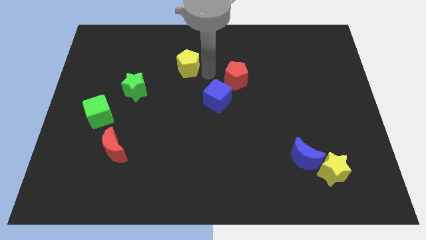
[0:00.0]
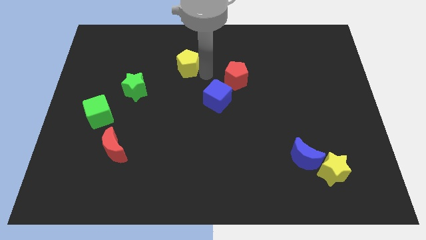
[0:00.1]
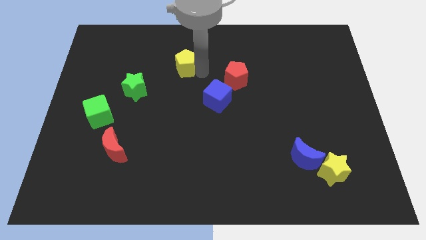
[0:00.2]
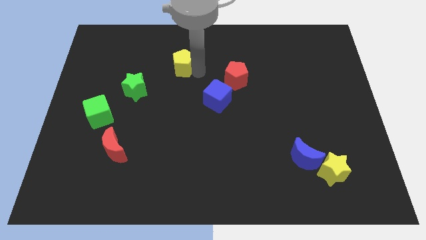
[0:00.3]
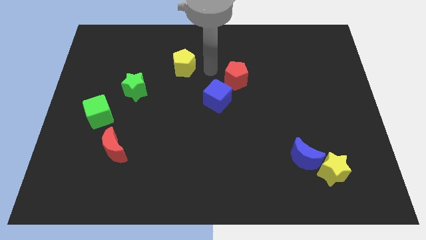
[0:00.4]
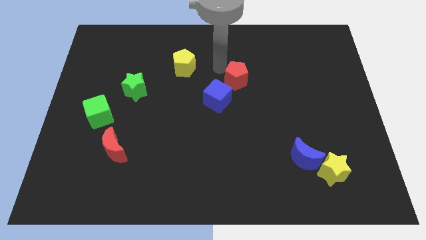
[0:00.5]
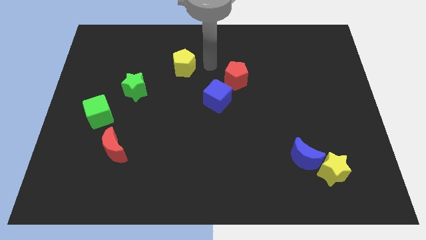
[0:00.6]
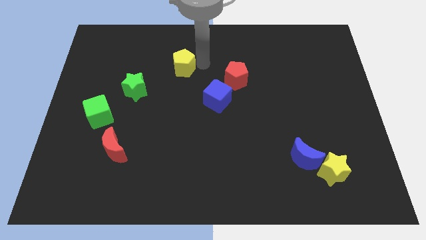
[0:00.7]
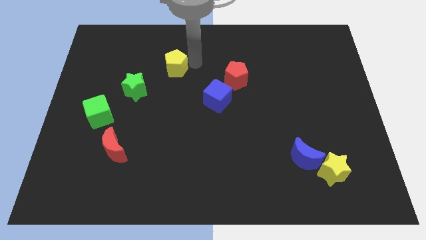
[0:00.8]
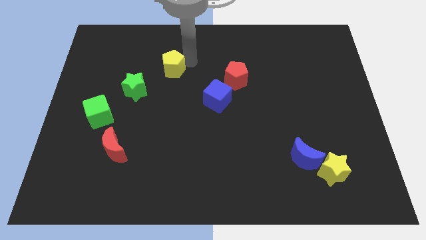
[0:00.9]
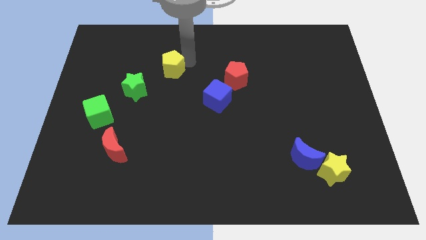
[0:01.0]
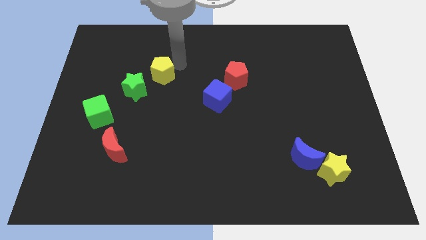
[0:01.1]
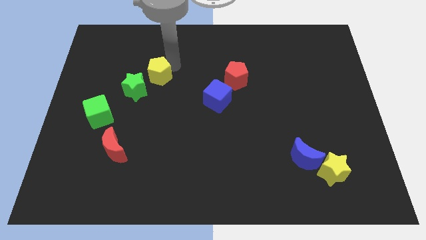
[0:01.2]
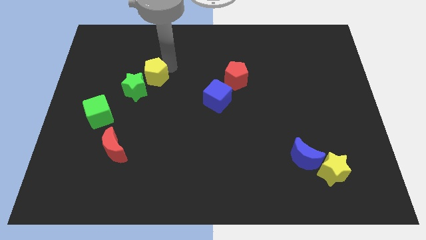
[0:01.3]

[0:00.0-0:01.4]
push the yellow pentagon towards the top right side of the green star

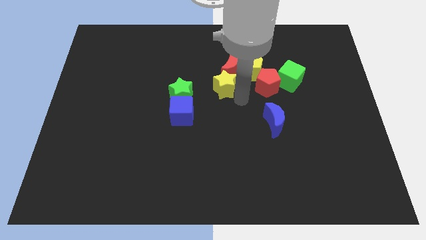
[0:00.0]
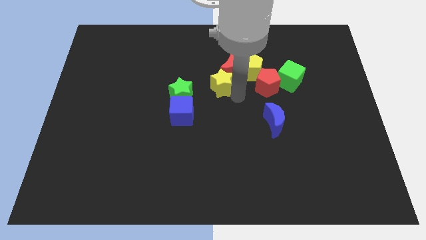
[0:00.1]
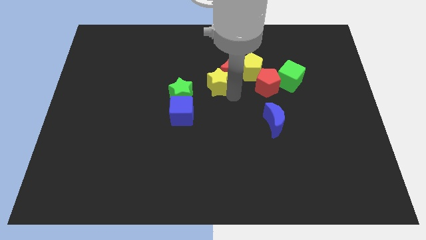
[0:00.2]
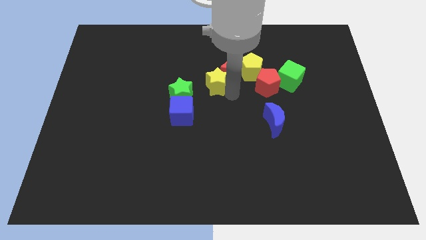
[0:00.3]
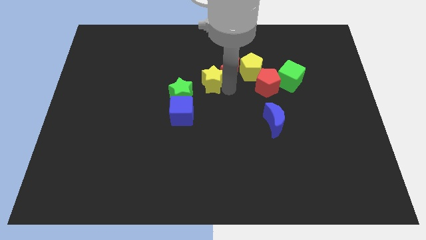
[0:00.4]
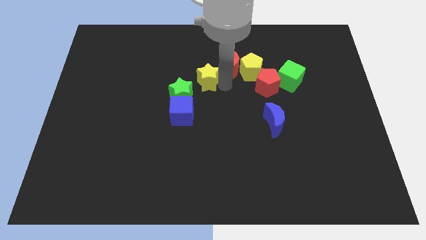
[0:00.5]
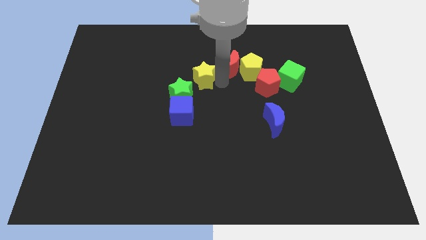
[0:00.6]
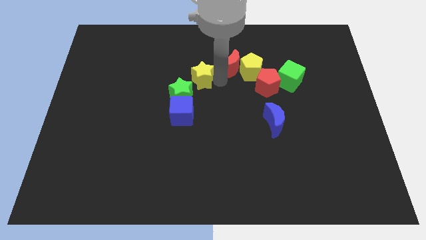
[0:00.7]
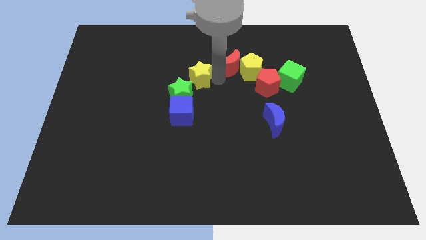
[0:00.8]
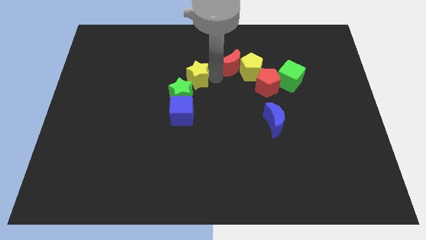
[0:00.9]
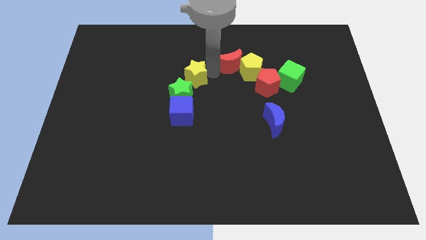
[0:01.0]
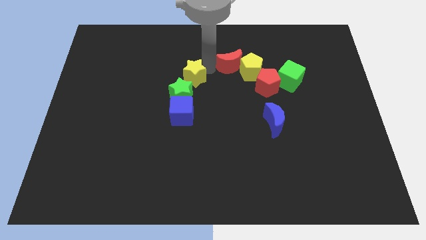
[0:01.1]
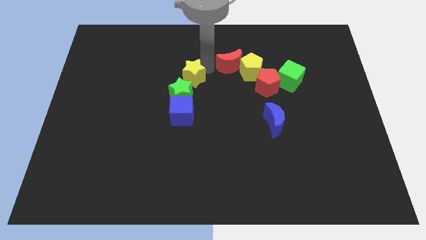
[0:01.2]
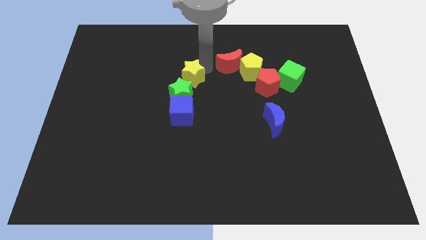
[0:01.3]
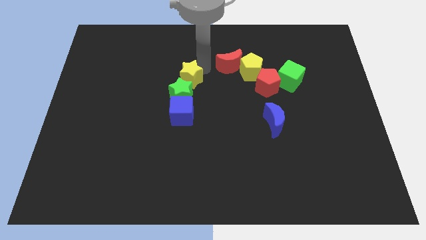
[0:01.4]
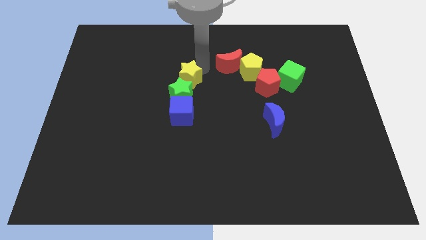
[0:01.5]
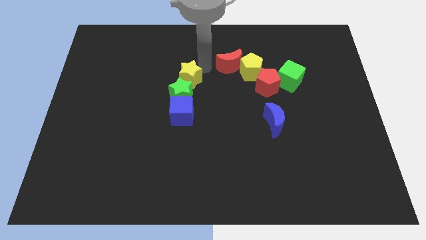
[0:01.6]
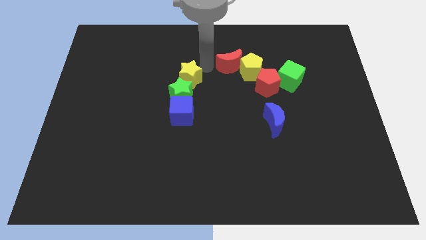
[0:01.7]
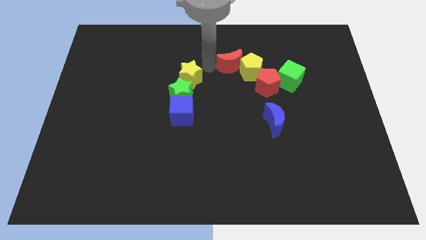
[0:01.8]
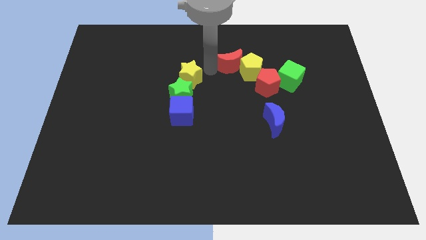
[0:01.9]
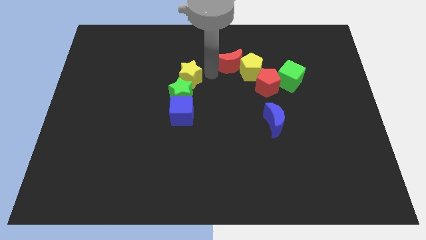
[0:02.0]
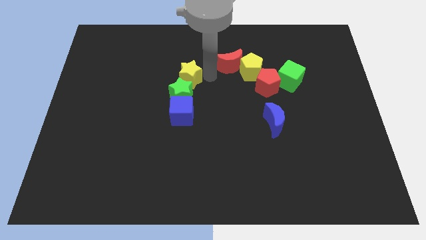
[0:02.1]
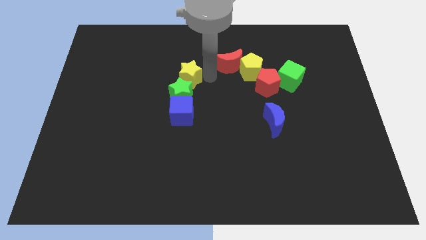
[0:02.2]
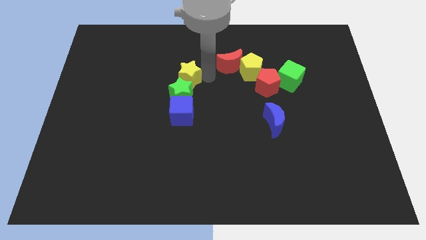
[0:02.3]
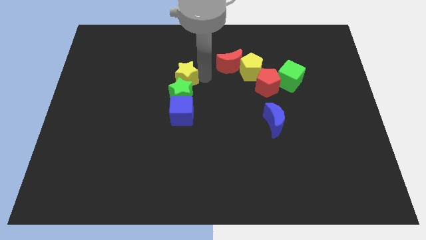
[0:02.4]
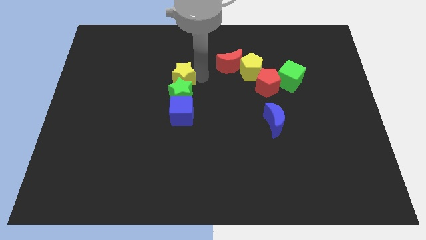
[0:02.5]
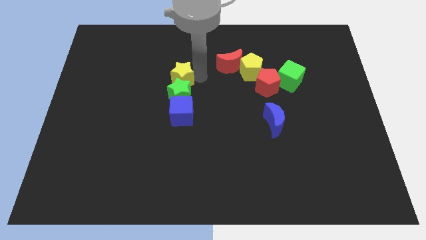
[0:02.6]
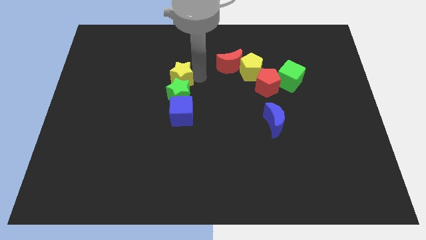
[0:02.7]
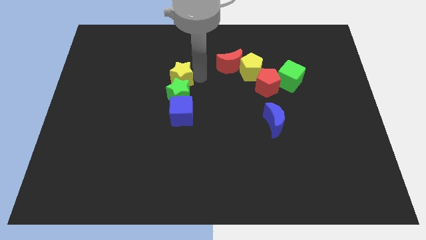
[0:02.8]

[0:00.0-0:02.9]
move the yellow star above the green star

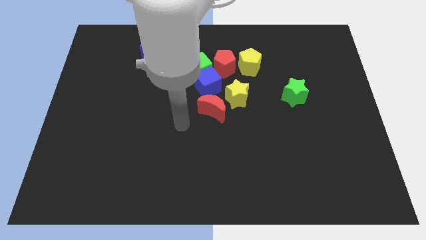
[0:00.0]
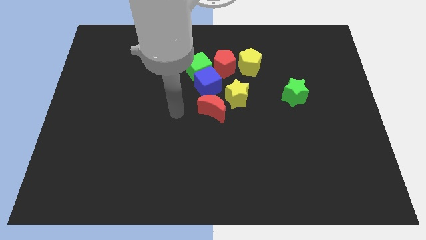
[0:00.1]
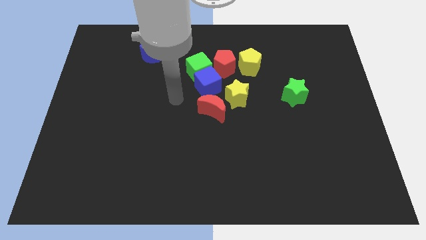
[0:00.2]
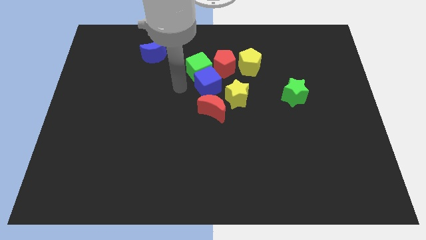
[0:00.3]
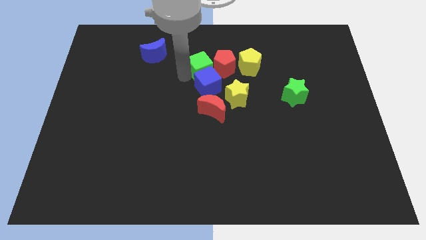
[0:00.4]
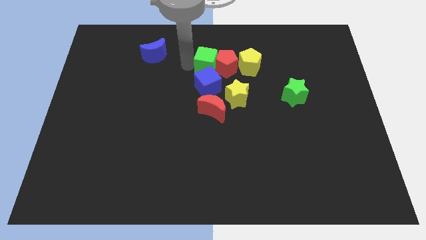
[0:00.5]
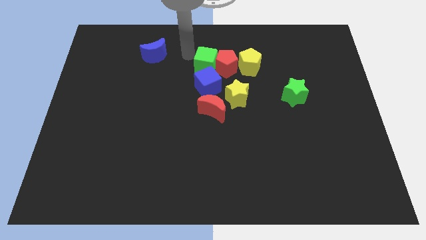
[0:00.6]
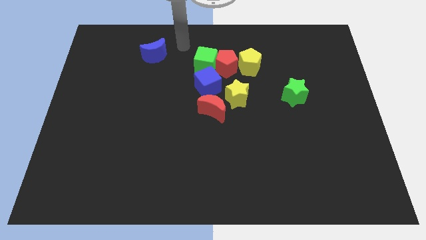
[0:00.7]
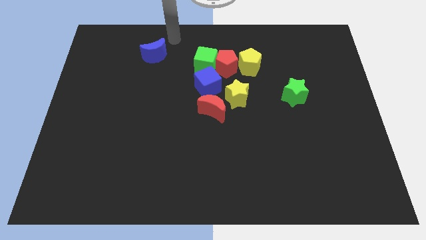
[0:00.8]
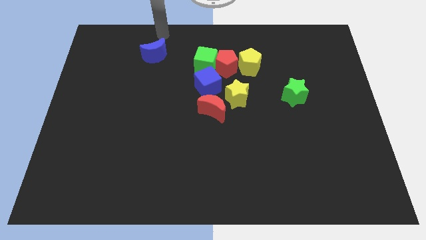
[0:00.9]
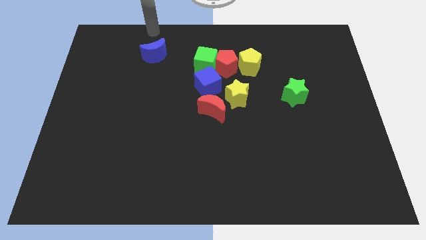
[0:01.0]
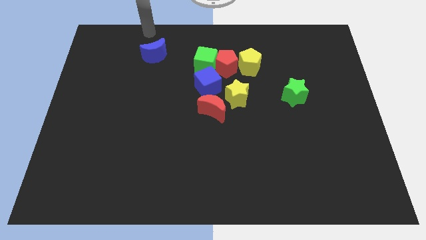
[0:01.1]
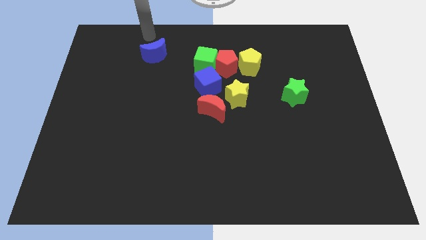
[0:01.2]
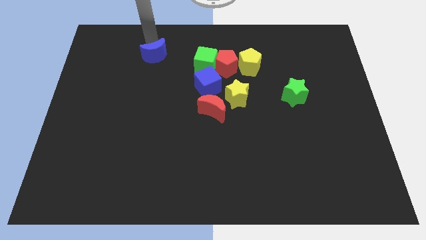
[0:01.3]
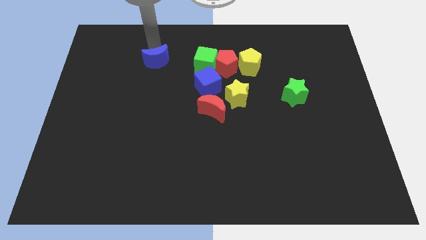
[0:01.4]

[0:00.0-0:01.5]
place the arm near the blue moon

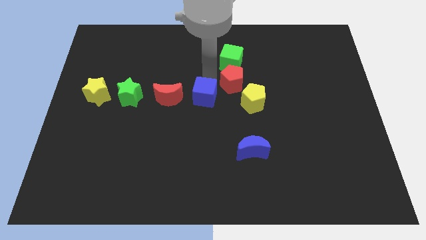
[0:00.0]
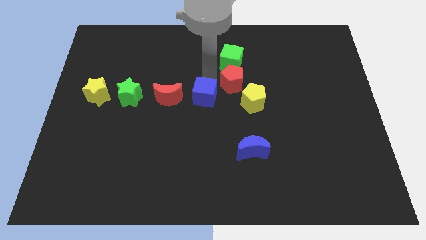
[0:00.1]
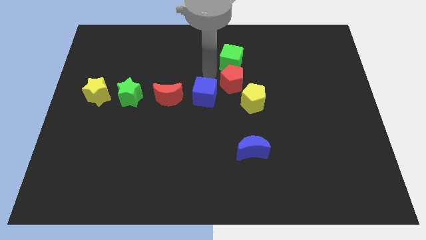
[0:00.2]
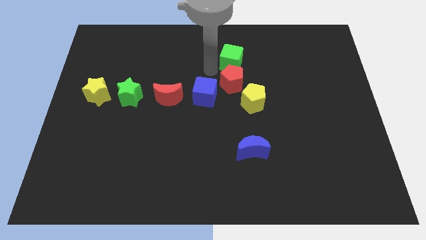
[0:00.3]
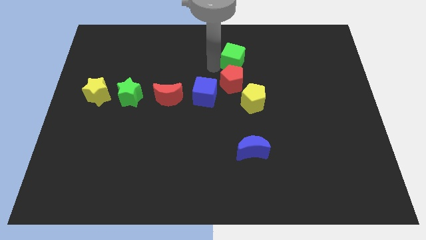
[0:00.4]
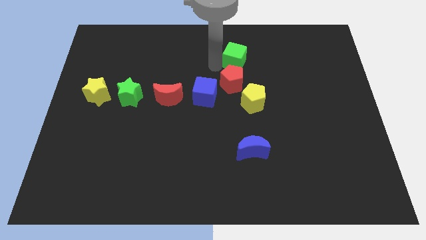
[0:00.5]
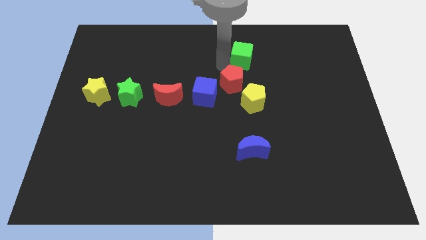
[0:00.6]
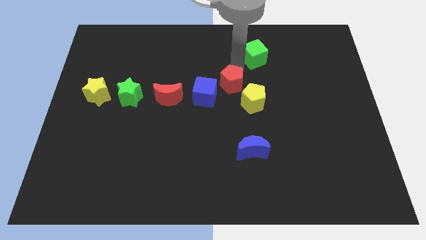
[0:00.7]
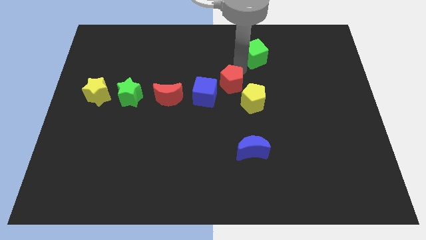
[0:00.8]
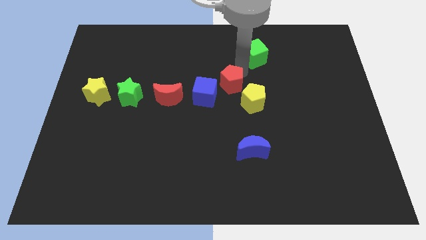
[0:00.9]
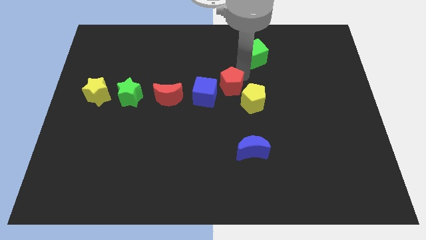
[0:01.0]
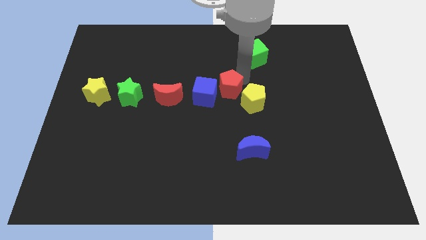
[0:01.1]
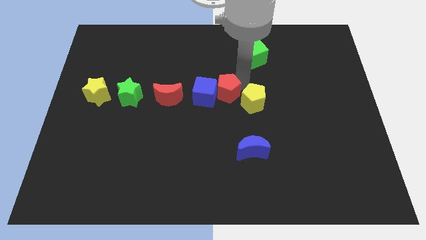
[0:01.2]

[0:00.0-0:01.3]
slightly move the green cube upwards

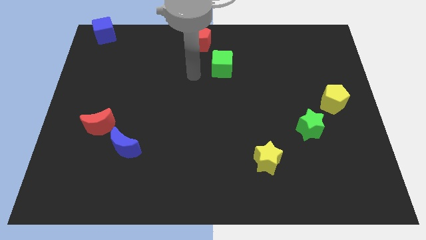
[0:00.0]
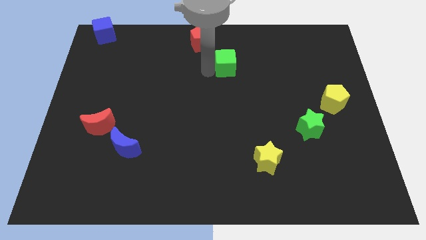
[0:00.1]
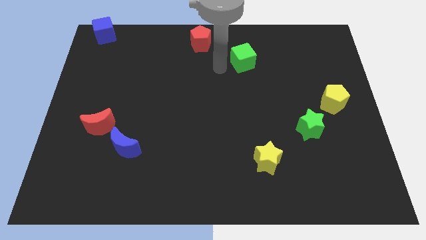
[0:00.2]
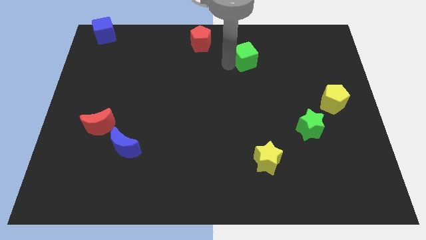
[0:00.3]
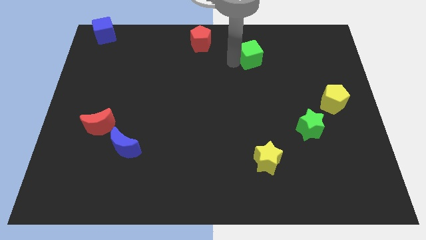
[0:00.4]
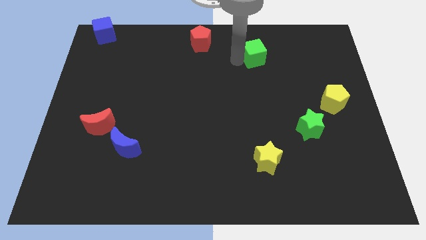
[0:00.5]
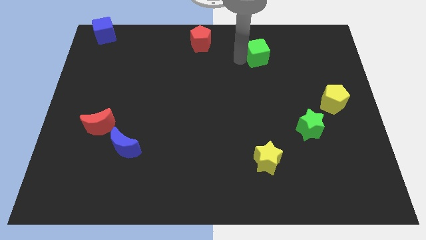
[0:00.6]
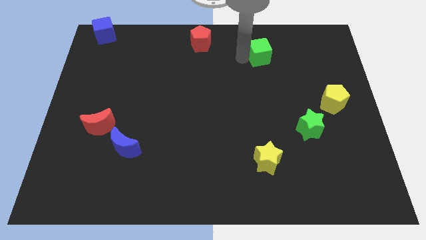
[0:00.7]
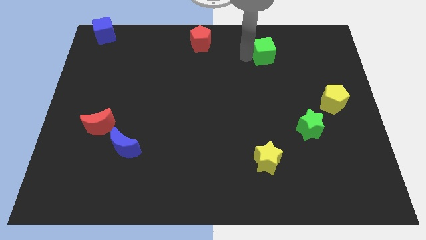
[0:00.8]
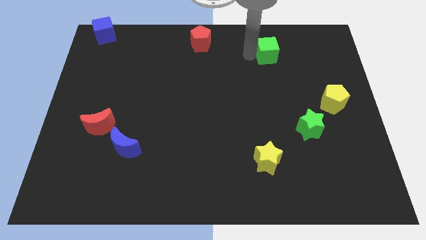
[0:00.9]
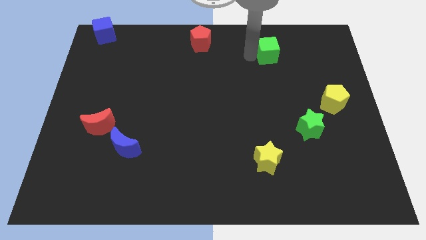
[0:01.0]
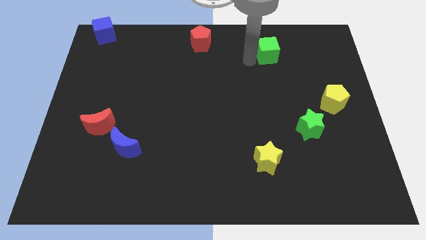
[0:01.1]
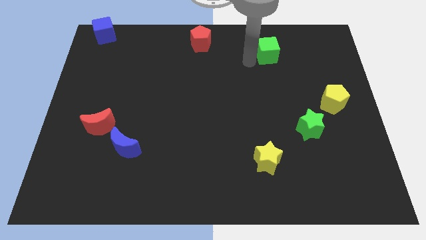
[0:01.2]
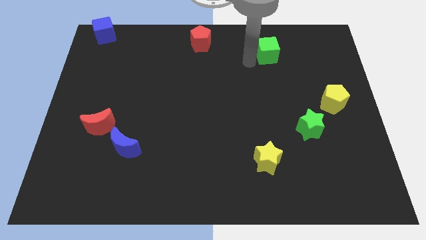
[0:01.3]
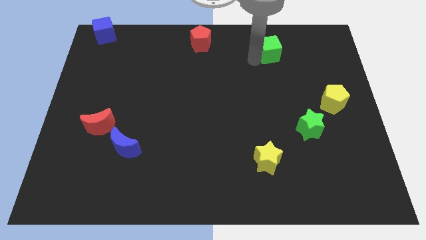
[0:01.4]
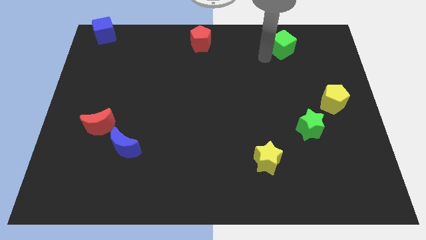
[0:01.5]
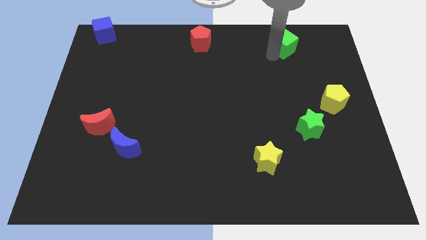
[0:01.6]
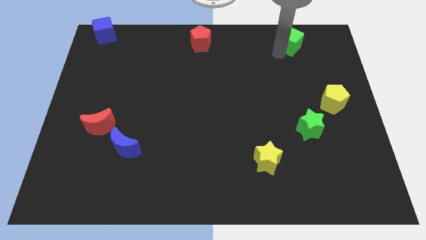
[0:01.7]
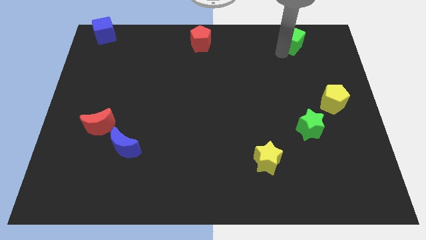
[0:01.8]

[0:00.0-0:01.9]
move the green cube to the right of the red pentagon
